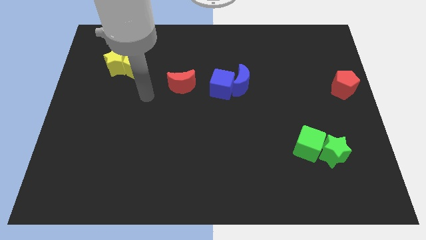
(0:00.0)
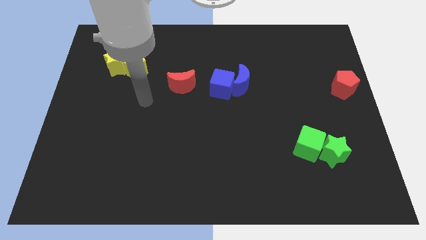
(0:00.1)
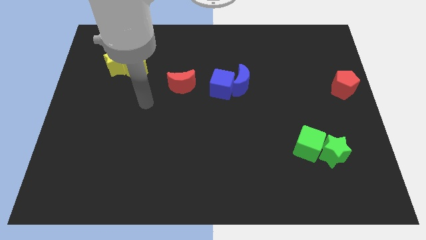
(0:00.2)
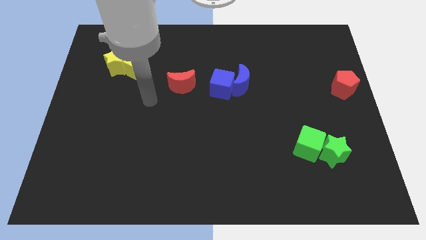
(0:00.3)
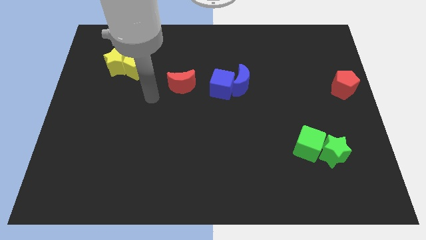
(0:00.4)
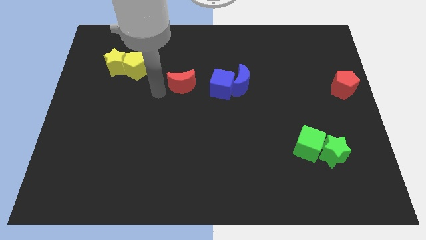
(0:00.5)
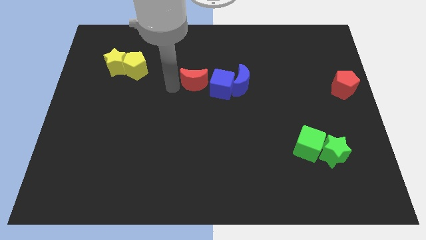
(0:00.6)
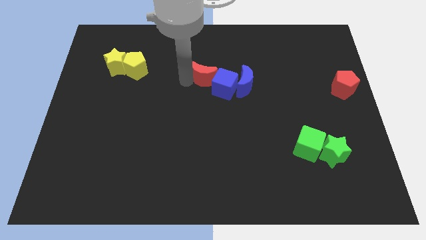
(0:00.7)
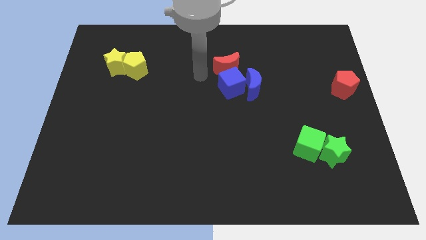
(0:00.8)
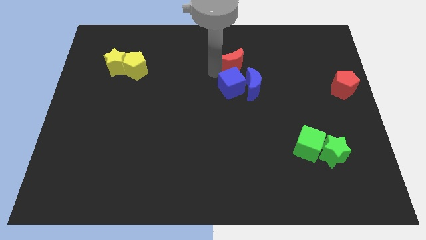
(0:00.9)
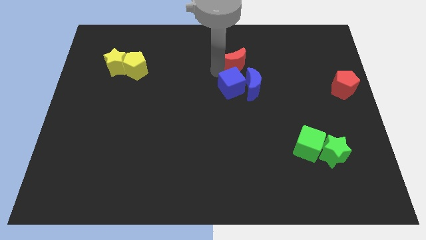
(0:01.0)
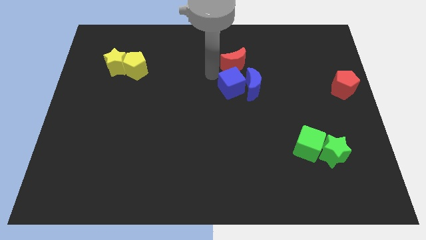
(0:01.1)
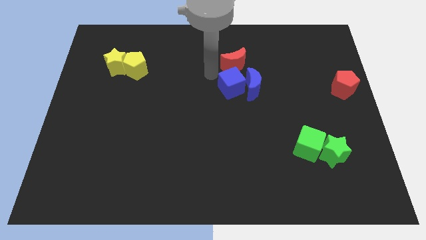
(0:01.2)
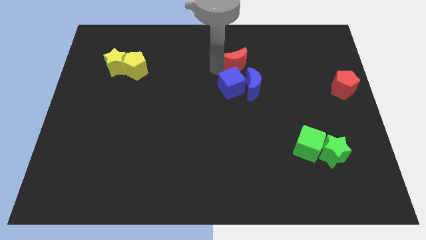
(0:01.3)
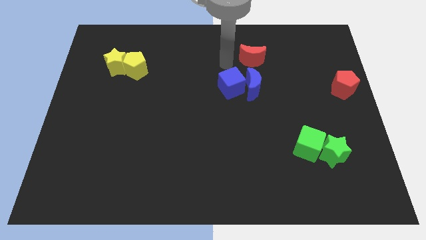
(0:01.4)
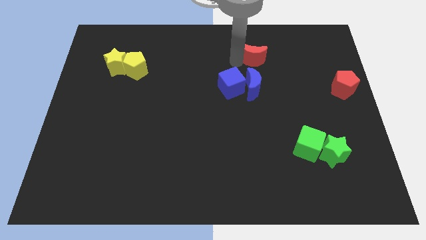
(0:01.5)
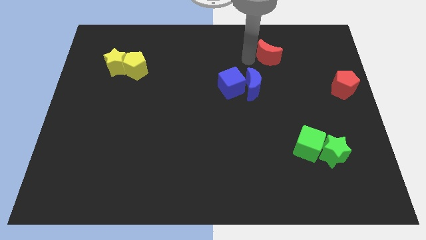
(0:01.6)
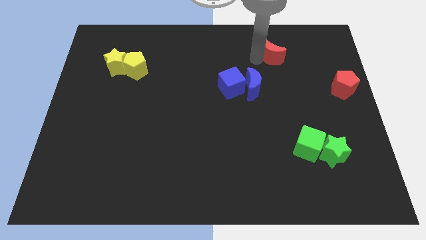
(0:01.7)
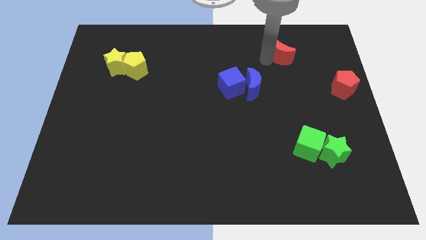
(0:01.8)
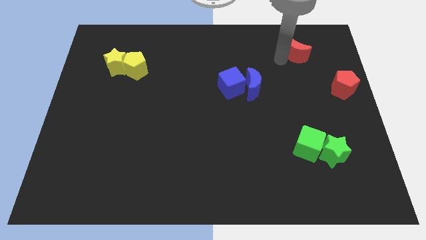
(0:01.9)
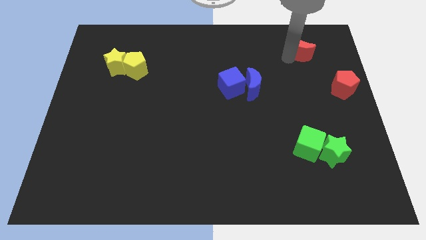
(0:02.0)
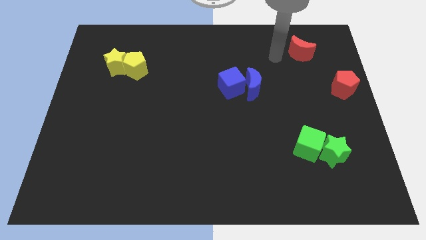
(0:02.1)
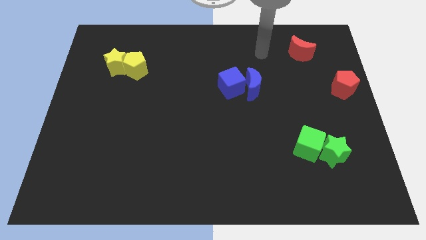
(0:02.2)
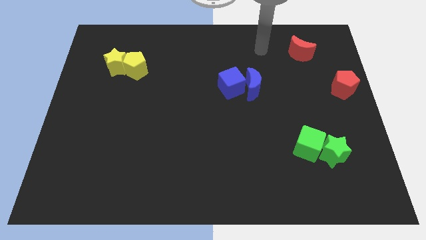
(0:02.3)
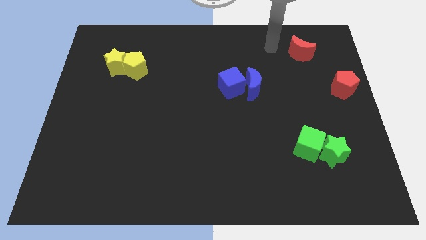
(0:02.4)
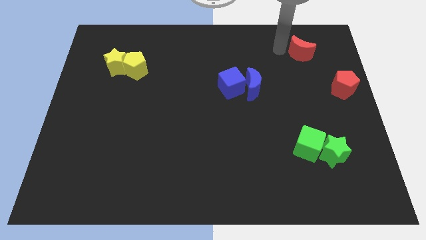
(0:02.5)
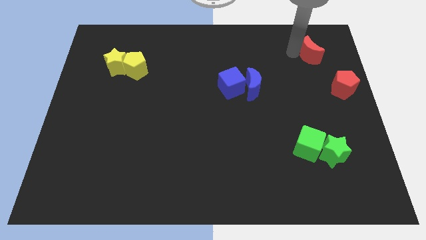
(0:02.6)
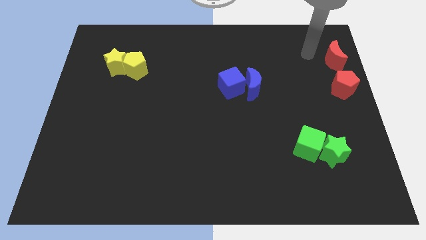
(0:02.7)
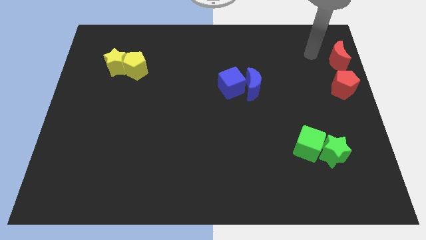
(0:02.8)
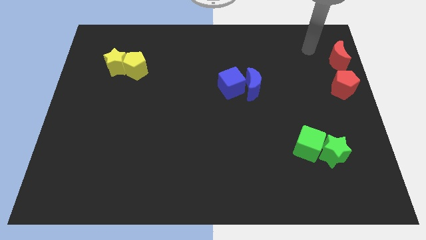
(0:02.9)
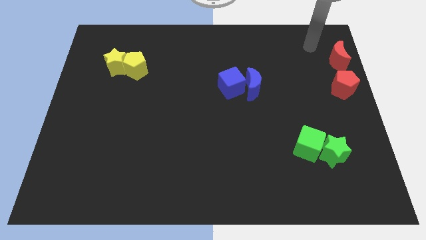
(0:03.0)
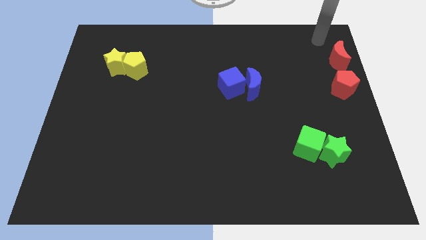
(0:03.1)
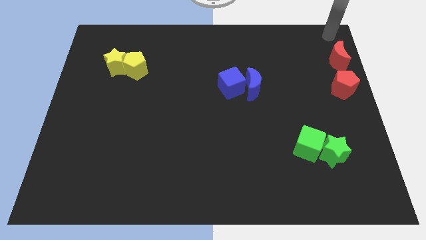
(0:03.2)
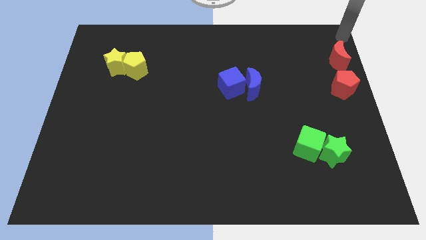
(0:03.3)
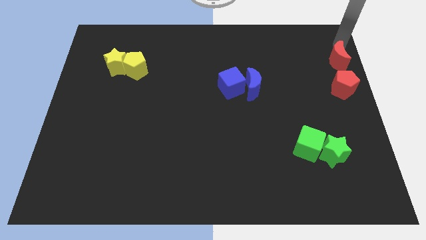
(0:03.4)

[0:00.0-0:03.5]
move the red crescent to the top of the red pentagon

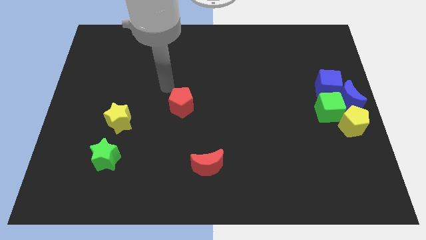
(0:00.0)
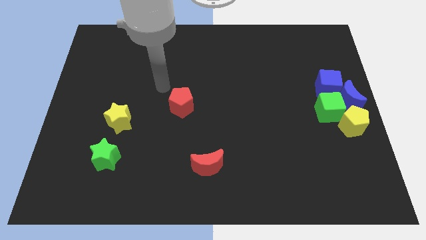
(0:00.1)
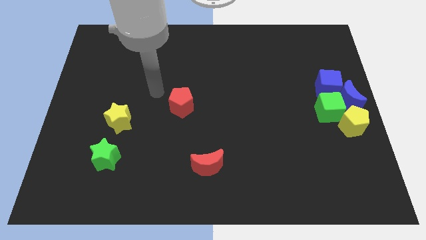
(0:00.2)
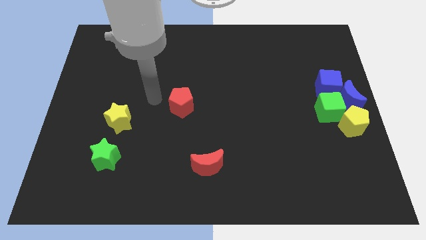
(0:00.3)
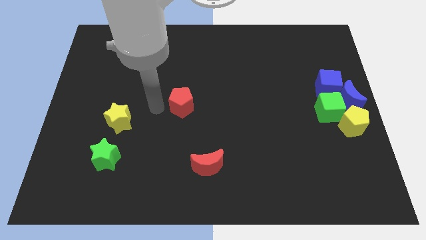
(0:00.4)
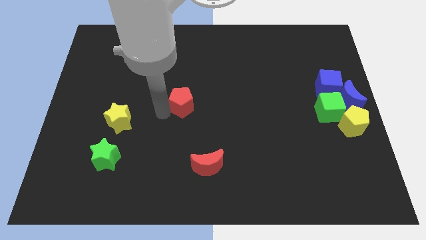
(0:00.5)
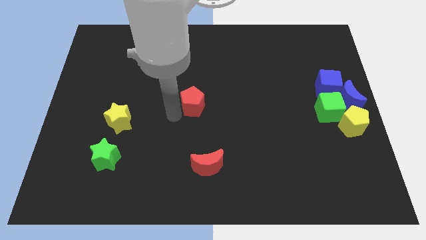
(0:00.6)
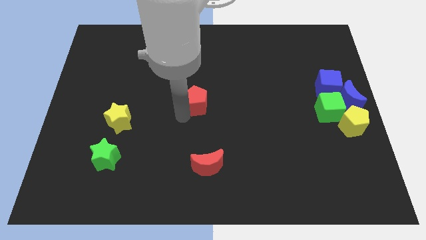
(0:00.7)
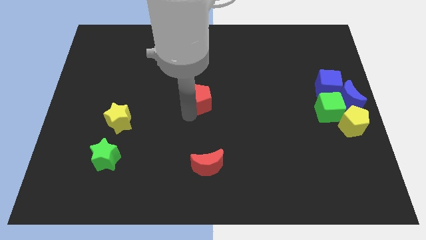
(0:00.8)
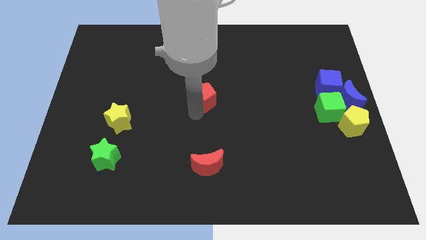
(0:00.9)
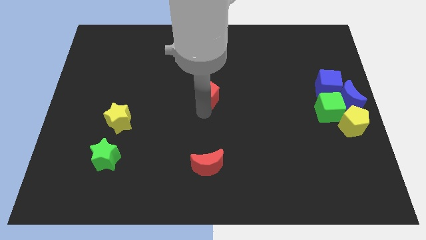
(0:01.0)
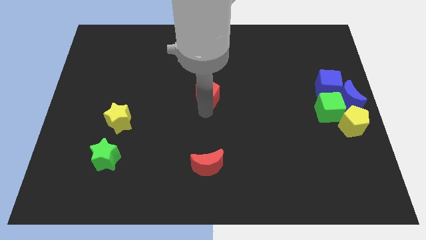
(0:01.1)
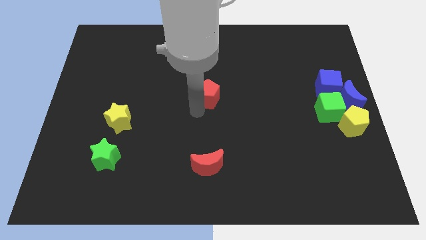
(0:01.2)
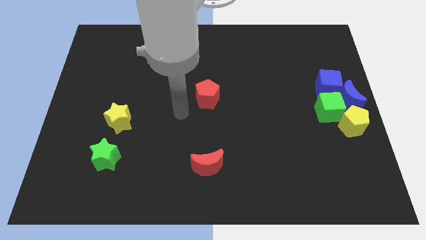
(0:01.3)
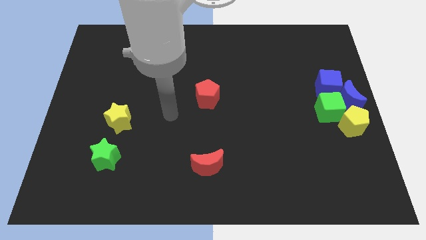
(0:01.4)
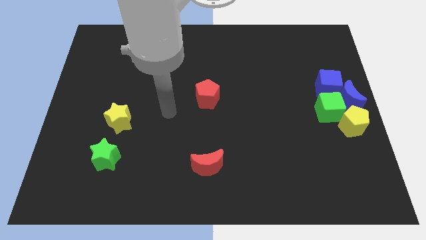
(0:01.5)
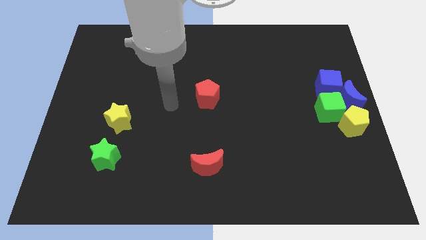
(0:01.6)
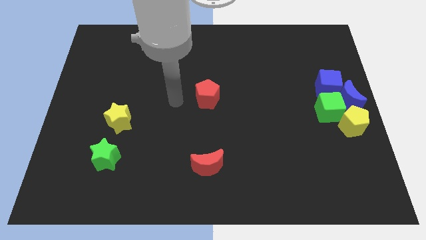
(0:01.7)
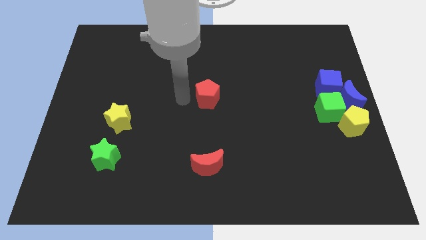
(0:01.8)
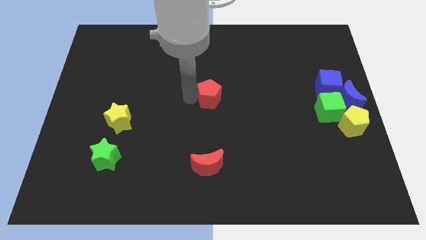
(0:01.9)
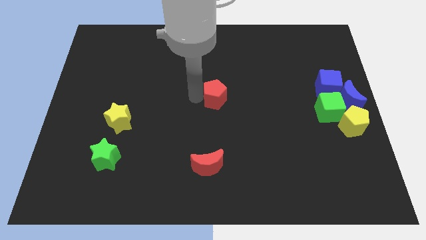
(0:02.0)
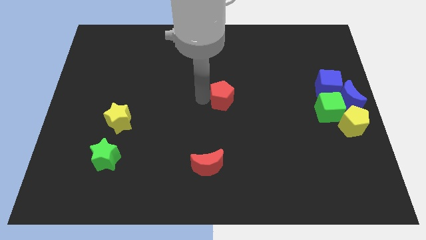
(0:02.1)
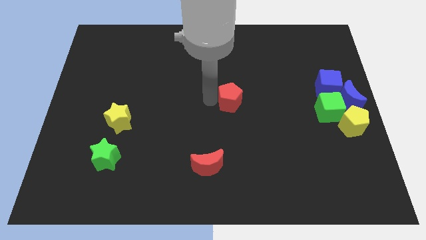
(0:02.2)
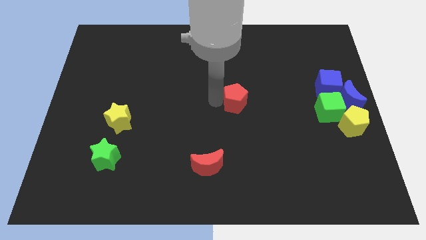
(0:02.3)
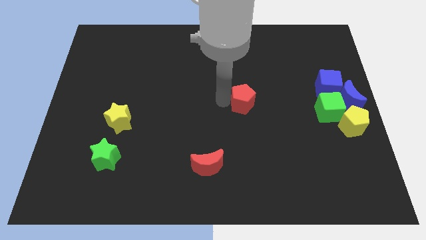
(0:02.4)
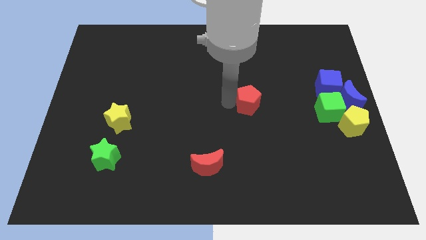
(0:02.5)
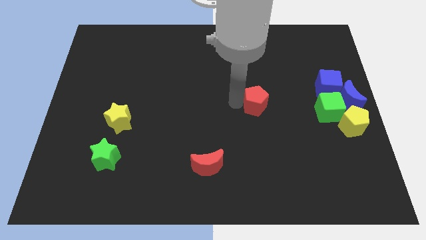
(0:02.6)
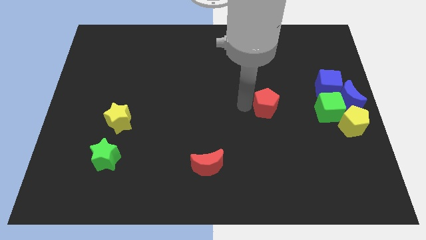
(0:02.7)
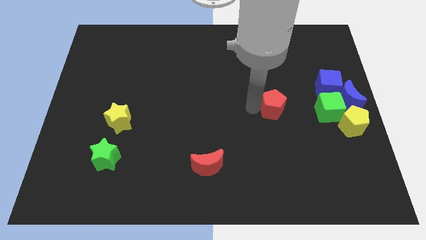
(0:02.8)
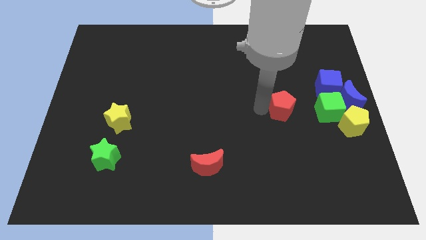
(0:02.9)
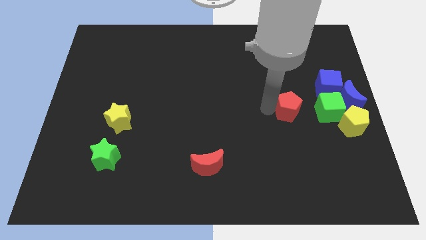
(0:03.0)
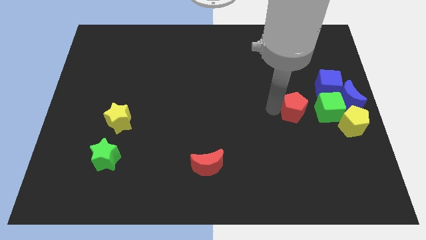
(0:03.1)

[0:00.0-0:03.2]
place the red pentagon left to the green cube

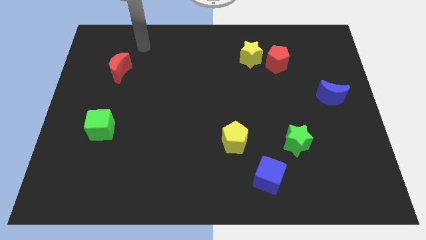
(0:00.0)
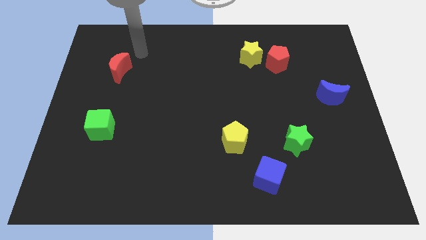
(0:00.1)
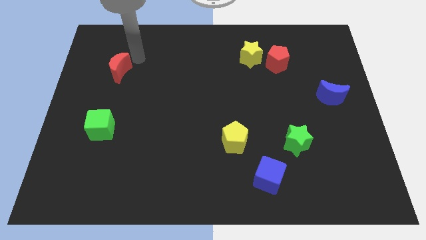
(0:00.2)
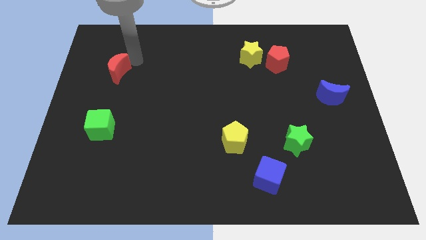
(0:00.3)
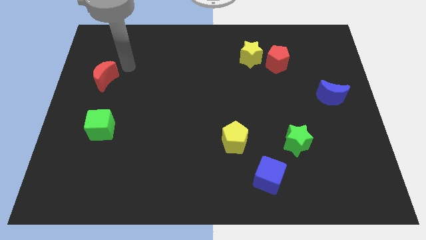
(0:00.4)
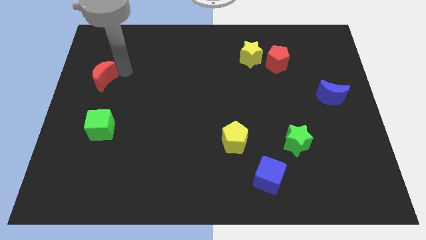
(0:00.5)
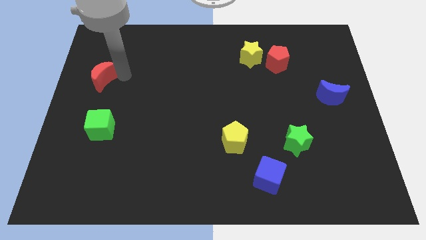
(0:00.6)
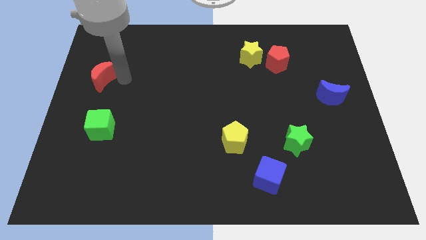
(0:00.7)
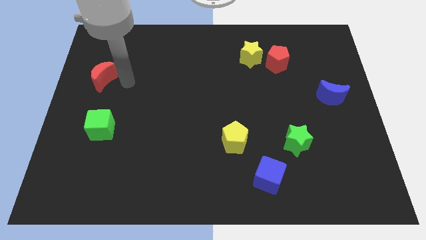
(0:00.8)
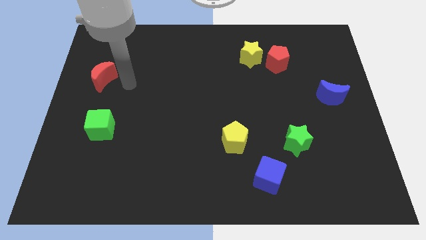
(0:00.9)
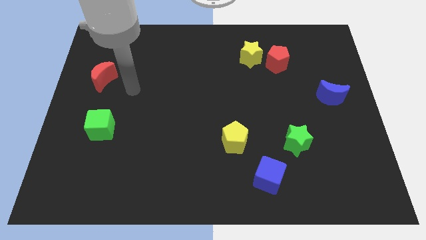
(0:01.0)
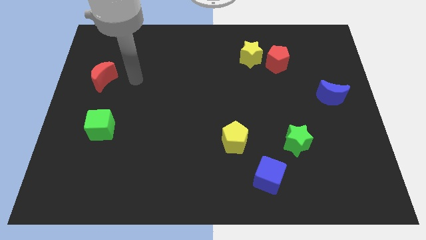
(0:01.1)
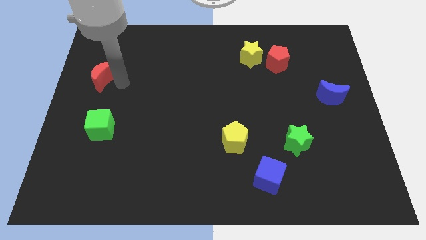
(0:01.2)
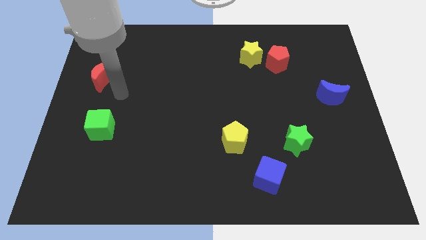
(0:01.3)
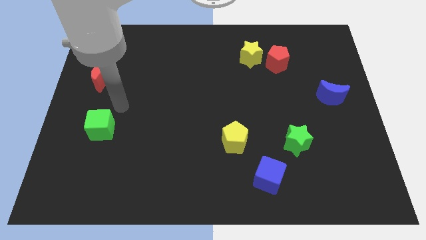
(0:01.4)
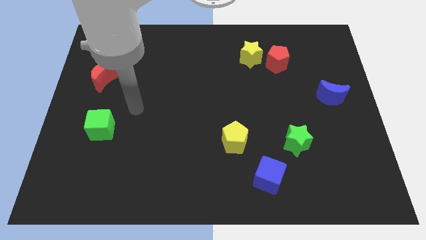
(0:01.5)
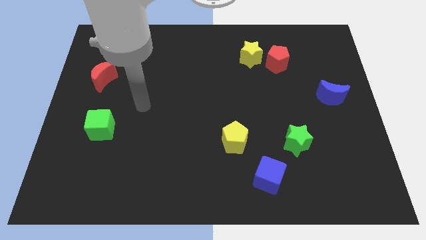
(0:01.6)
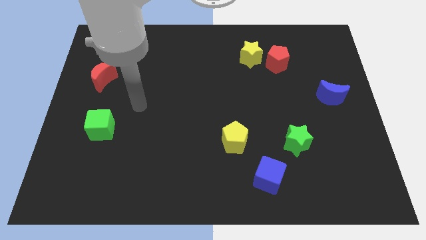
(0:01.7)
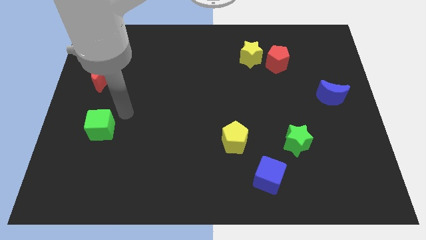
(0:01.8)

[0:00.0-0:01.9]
hit the red moon

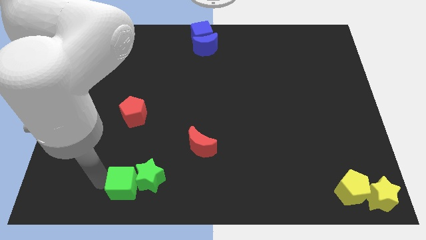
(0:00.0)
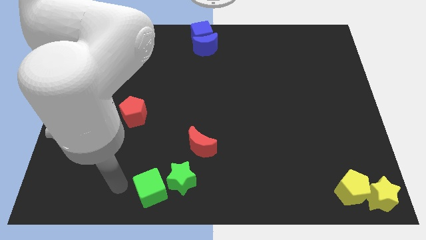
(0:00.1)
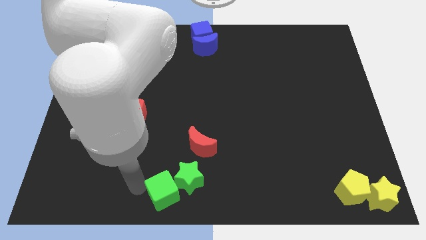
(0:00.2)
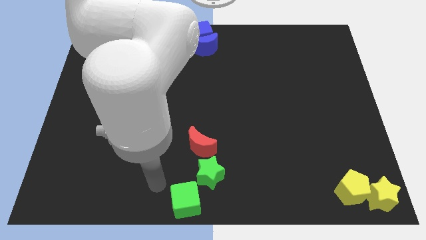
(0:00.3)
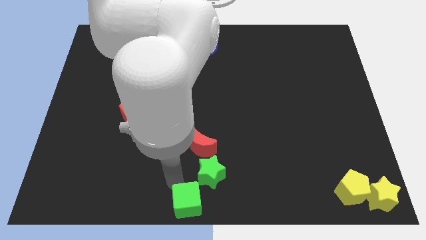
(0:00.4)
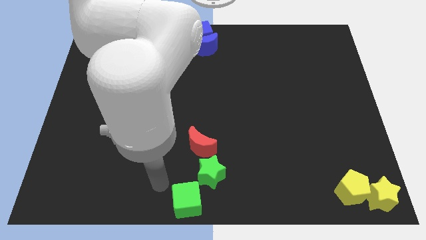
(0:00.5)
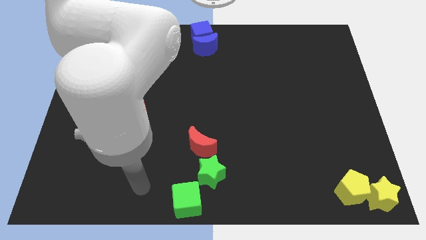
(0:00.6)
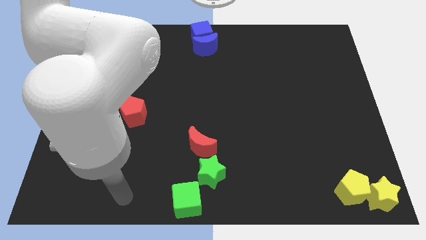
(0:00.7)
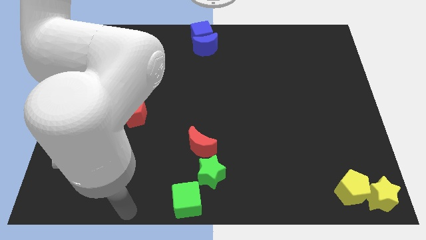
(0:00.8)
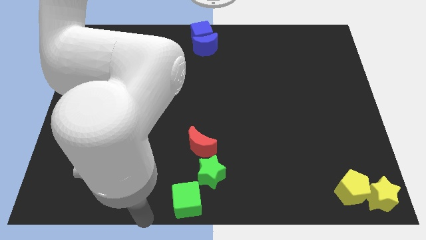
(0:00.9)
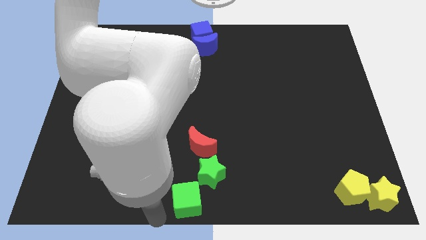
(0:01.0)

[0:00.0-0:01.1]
push the green cube to the right side
